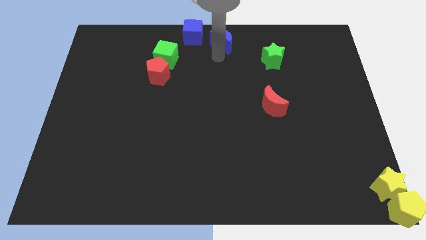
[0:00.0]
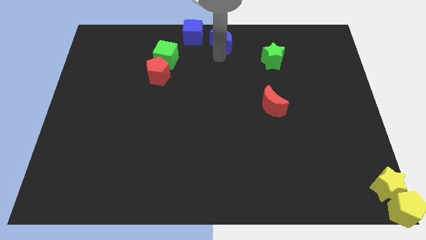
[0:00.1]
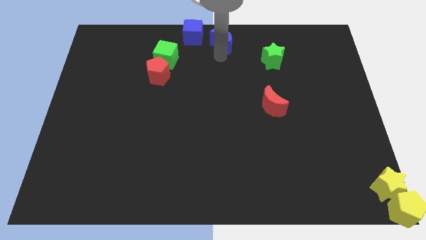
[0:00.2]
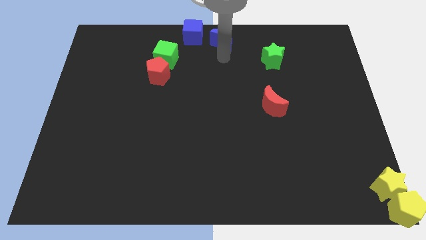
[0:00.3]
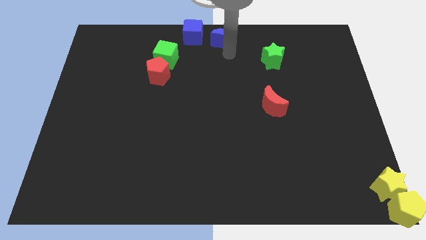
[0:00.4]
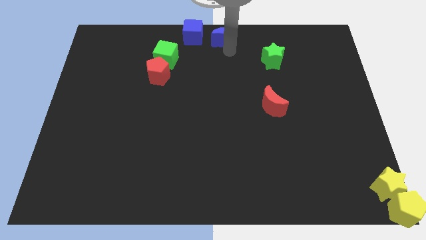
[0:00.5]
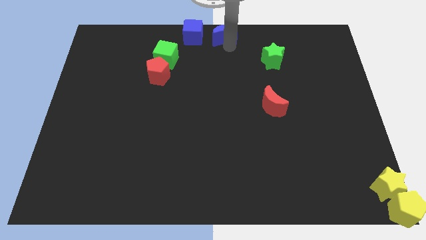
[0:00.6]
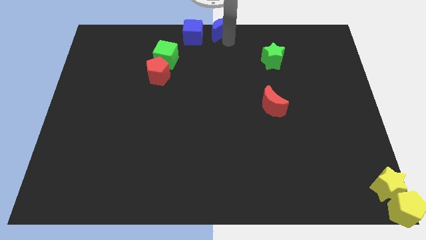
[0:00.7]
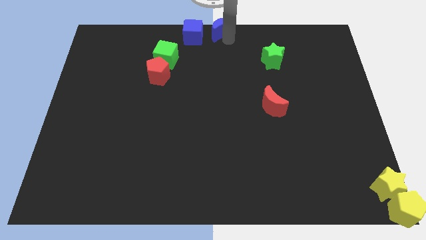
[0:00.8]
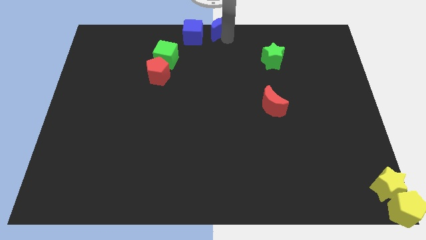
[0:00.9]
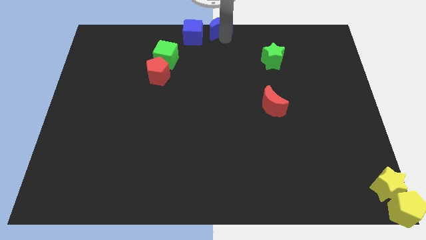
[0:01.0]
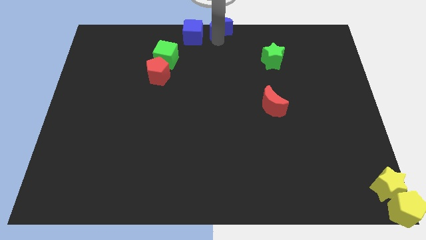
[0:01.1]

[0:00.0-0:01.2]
push the blue crescent towards the right side of the blue cube

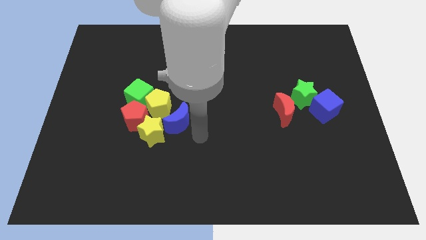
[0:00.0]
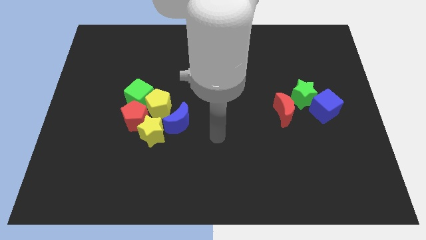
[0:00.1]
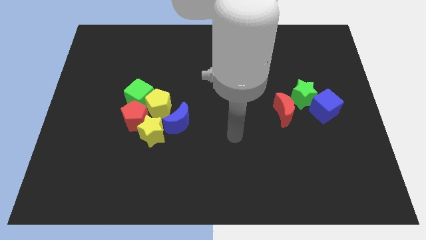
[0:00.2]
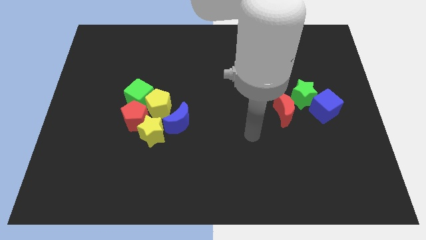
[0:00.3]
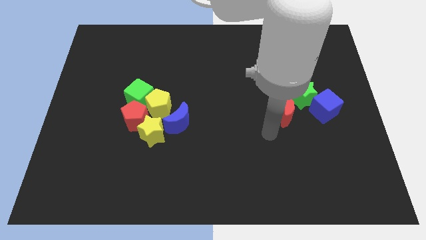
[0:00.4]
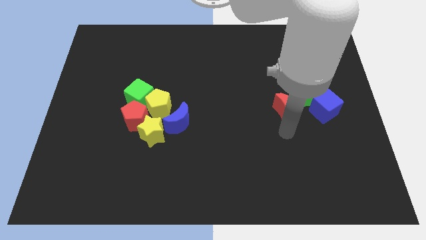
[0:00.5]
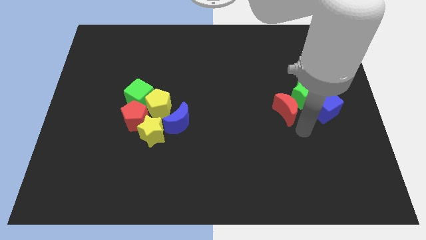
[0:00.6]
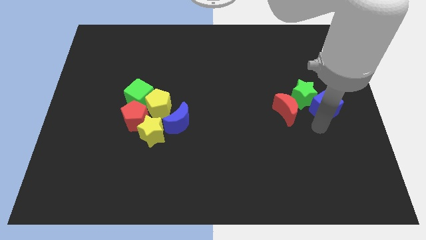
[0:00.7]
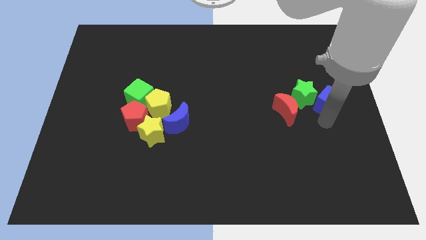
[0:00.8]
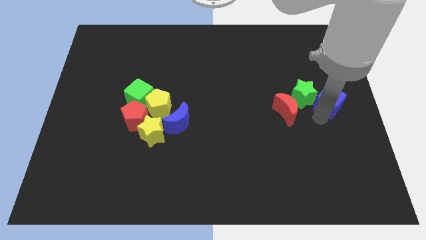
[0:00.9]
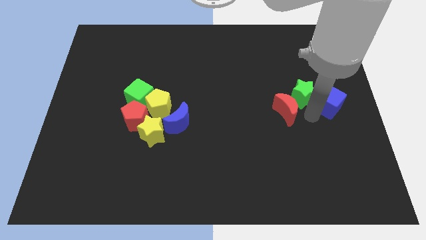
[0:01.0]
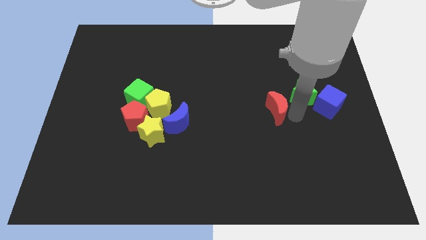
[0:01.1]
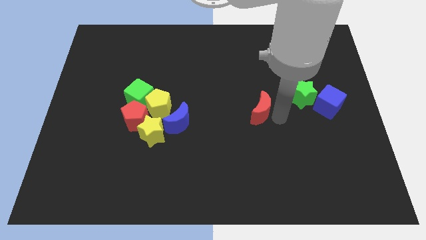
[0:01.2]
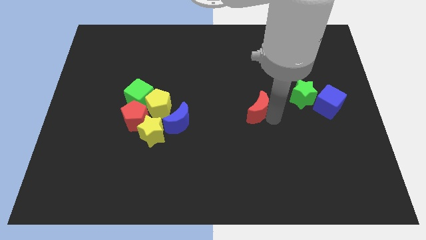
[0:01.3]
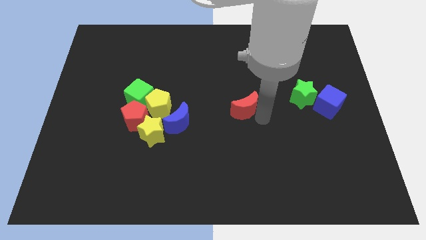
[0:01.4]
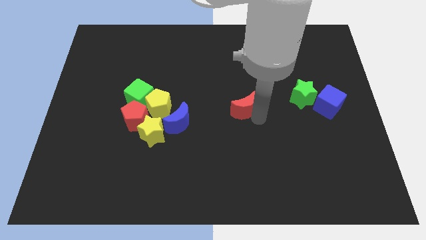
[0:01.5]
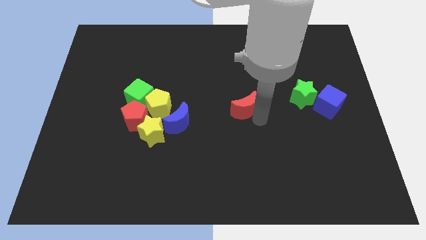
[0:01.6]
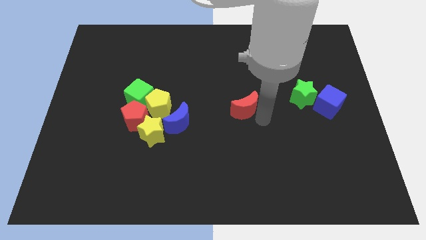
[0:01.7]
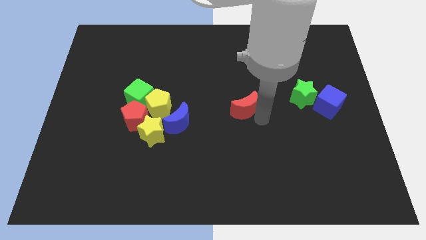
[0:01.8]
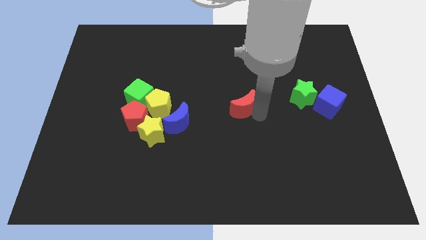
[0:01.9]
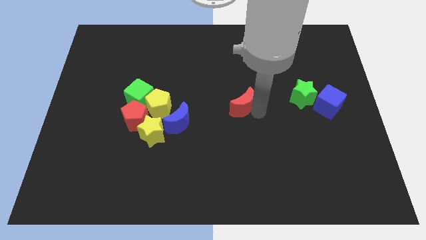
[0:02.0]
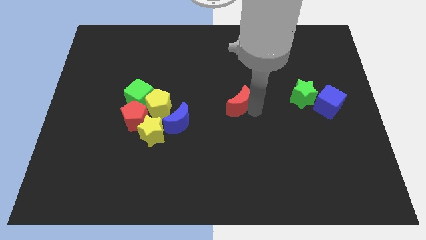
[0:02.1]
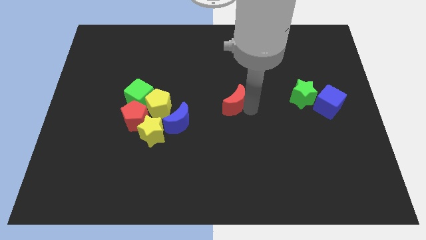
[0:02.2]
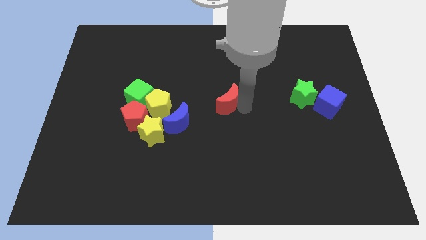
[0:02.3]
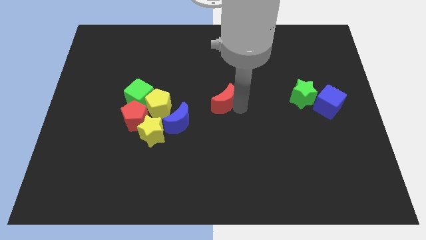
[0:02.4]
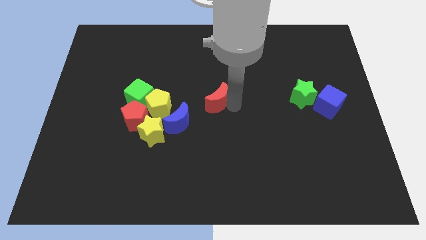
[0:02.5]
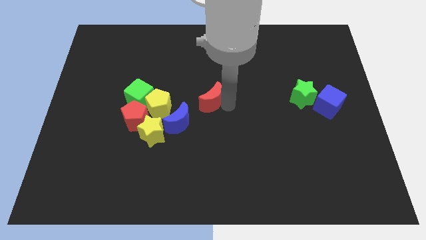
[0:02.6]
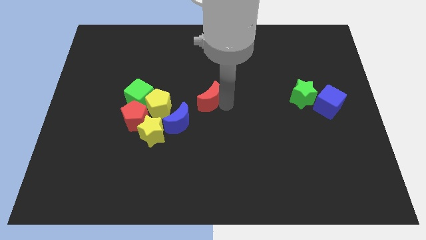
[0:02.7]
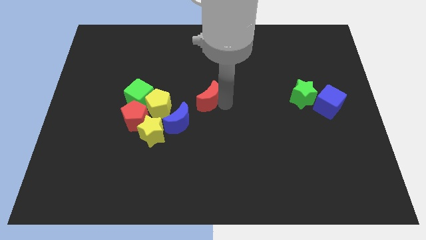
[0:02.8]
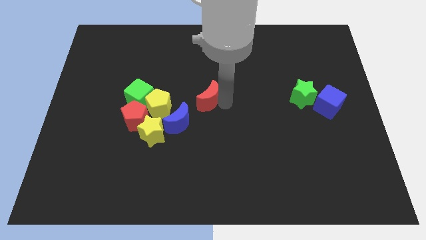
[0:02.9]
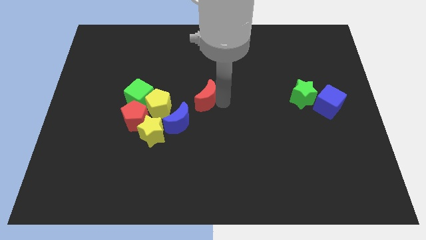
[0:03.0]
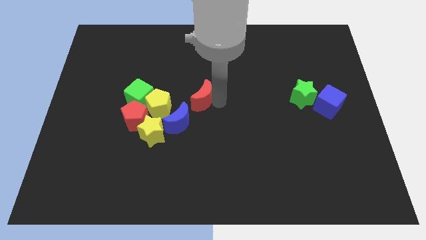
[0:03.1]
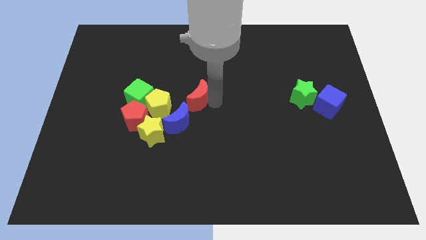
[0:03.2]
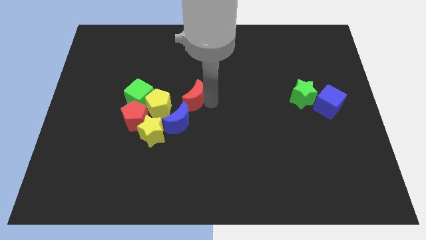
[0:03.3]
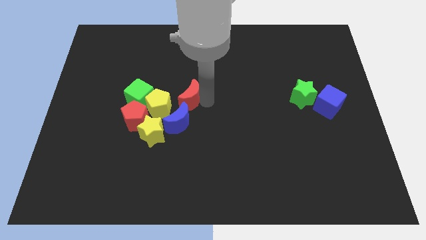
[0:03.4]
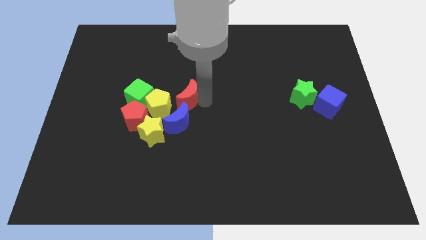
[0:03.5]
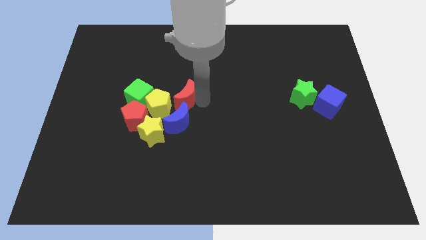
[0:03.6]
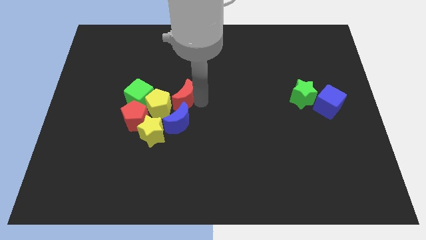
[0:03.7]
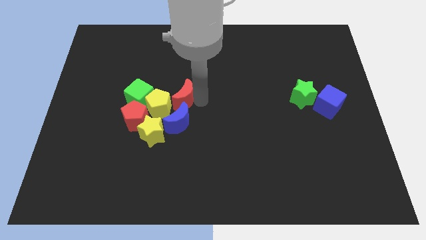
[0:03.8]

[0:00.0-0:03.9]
move the red crescent above the blue crescent

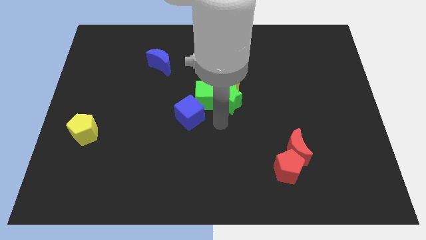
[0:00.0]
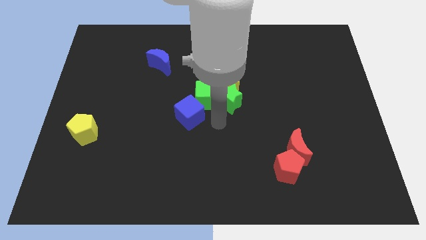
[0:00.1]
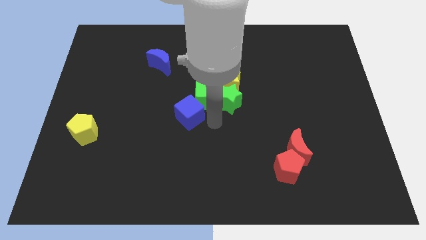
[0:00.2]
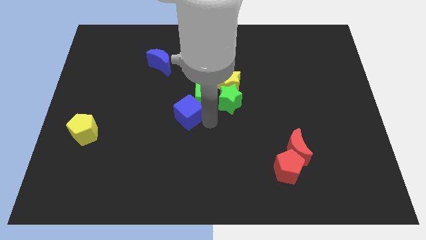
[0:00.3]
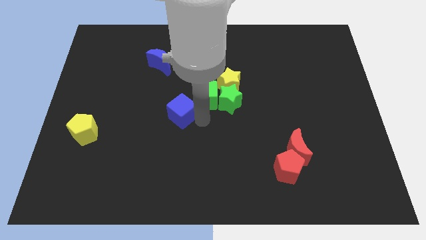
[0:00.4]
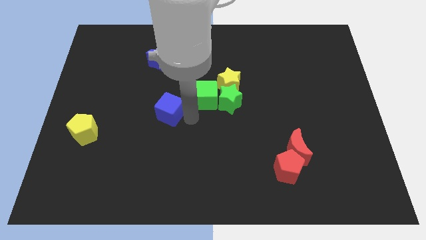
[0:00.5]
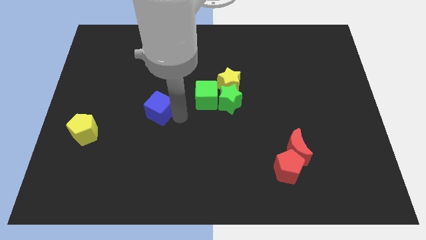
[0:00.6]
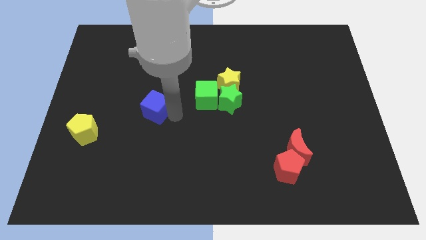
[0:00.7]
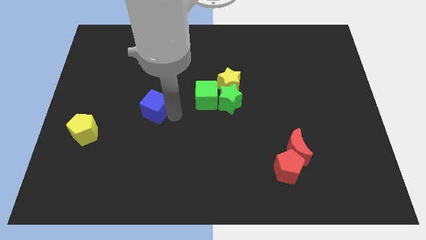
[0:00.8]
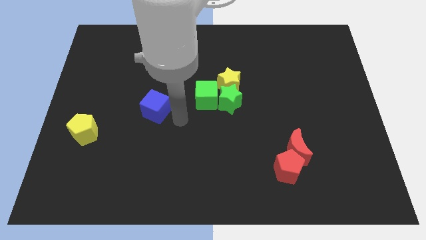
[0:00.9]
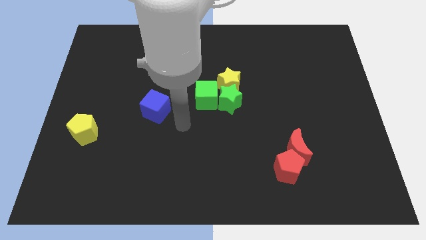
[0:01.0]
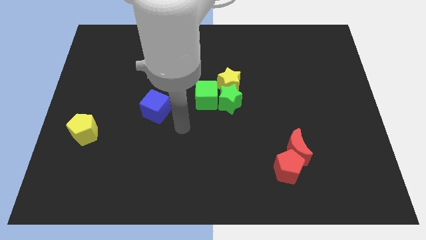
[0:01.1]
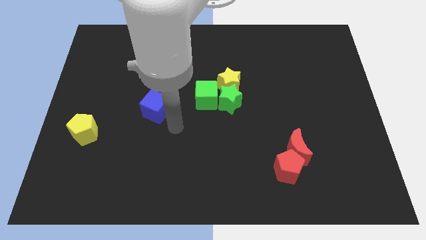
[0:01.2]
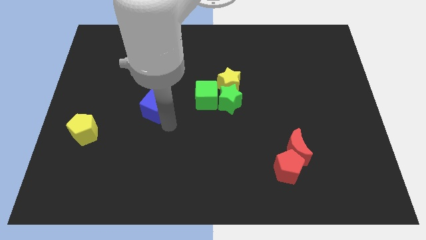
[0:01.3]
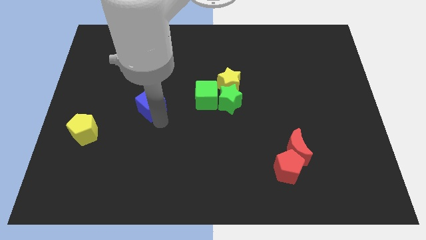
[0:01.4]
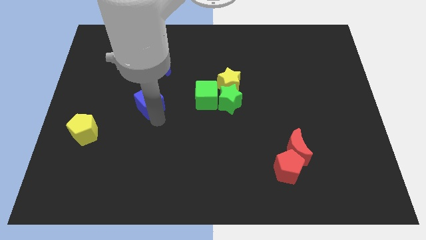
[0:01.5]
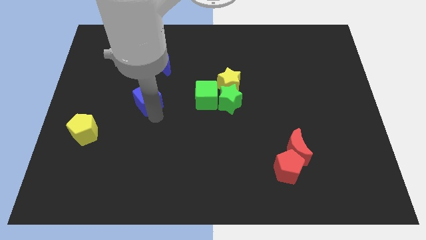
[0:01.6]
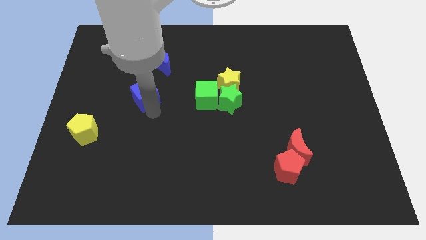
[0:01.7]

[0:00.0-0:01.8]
move the blue cube to the left of the green cube

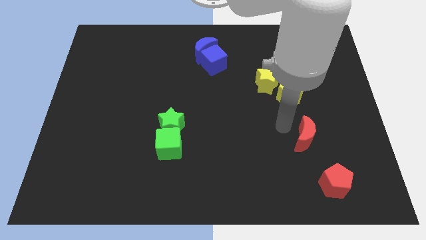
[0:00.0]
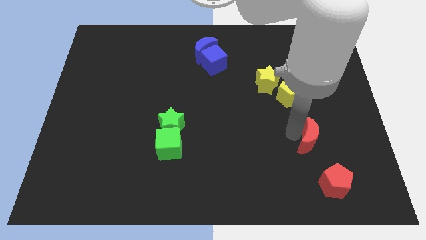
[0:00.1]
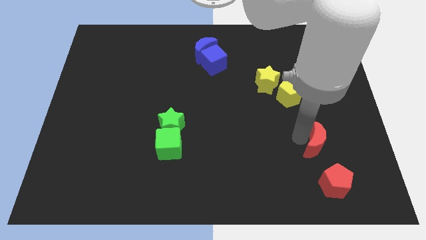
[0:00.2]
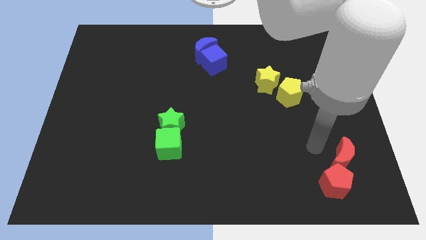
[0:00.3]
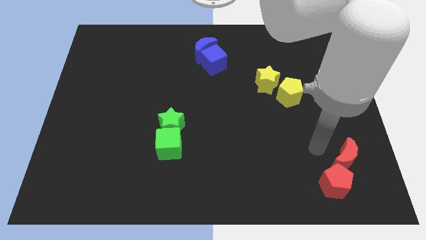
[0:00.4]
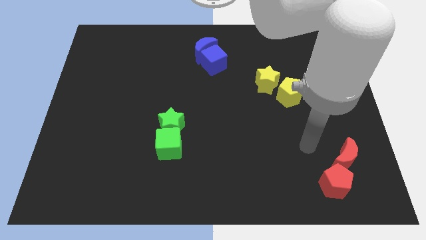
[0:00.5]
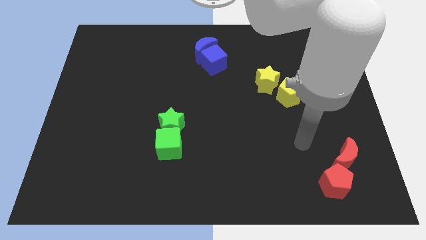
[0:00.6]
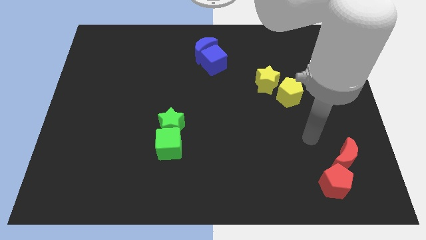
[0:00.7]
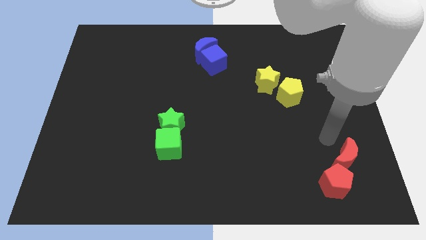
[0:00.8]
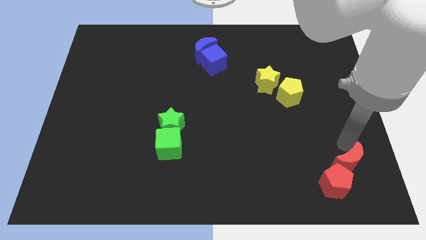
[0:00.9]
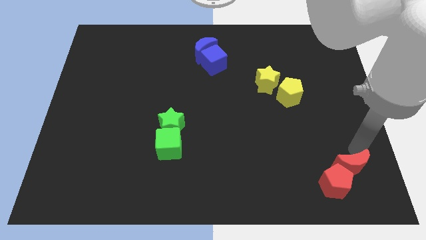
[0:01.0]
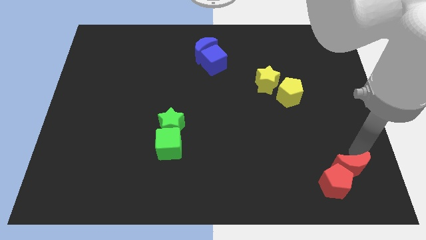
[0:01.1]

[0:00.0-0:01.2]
place the red crescent above the red pentagon

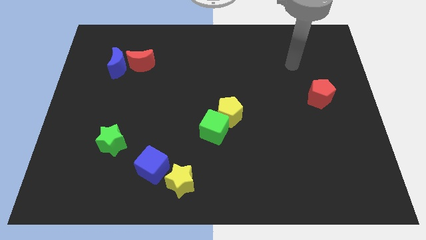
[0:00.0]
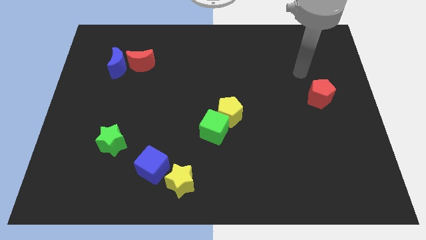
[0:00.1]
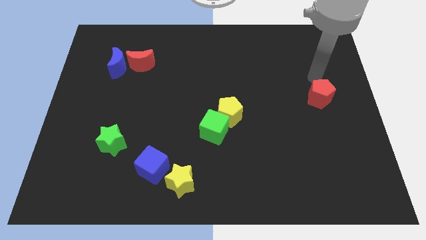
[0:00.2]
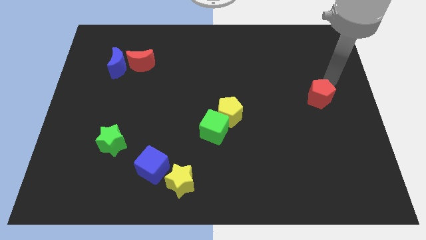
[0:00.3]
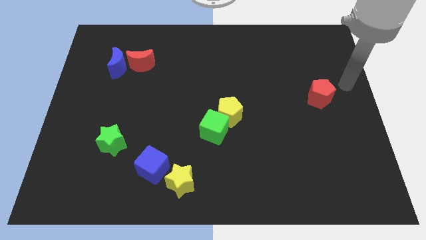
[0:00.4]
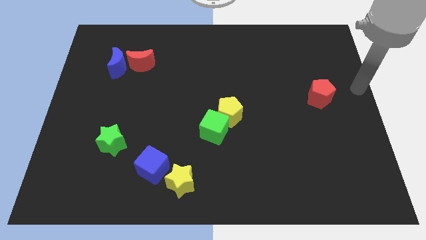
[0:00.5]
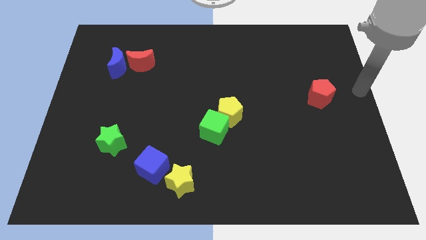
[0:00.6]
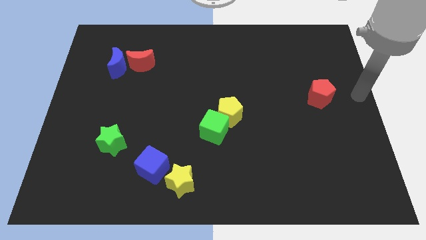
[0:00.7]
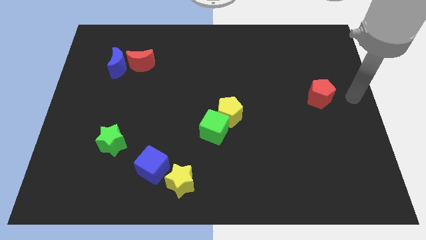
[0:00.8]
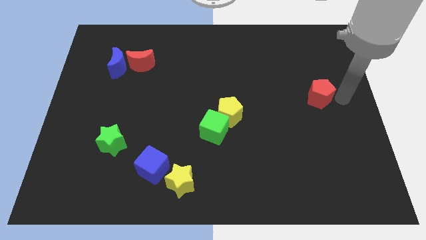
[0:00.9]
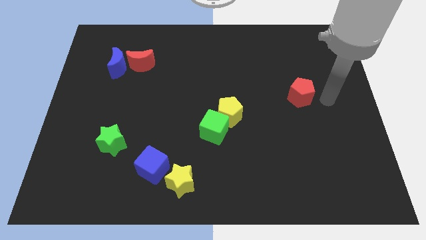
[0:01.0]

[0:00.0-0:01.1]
push the red pentagon slightly towards the left side
